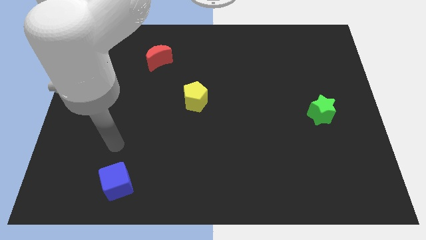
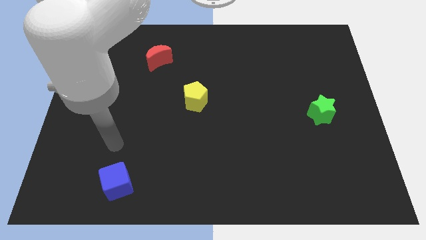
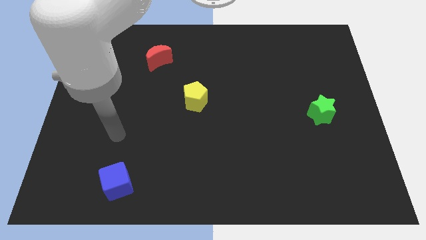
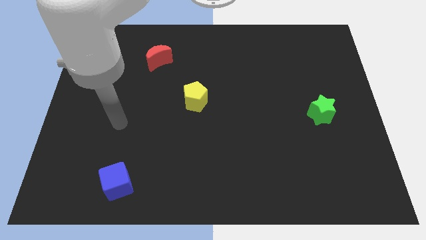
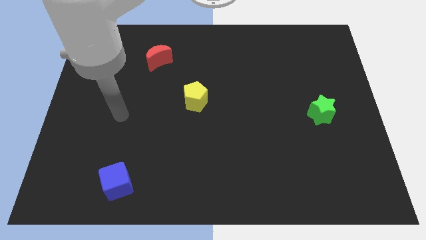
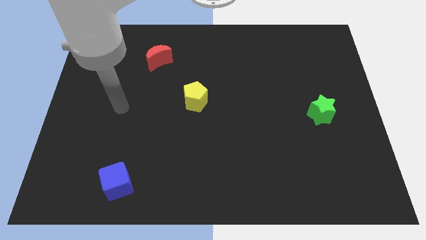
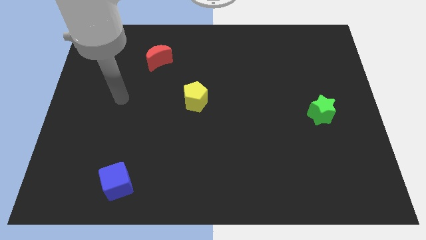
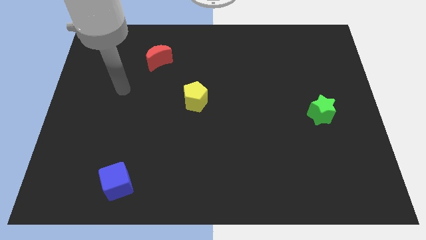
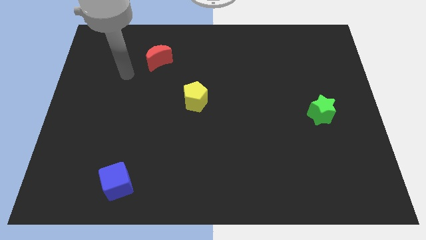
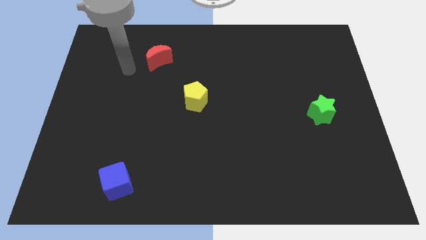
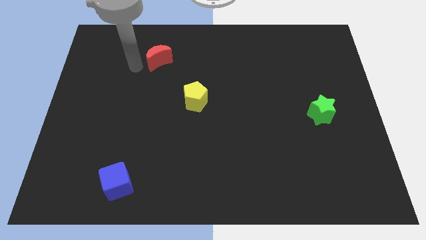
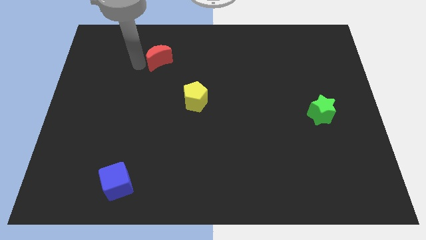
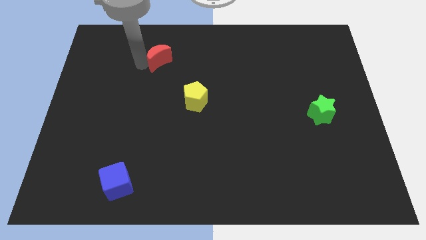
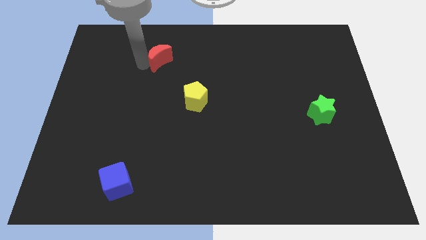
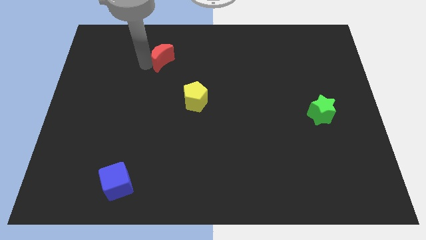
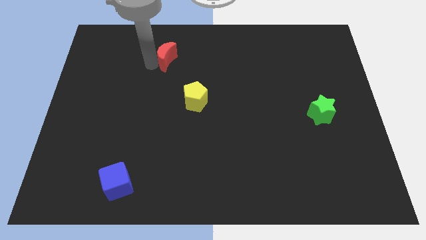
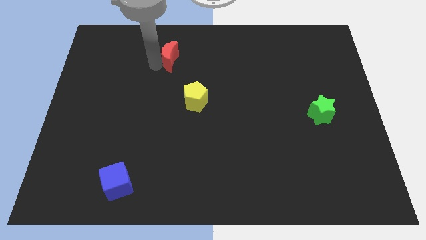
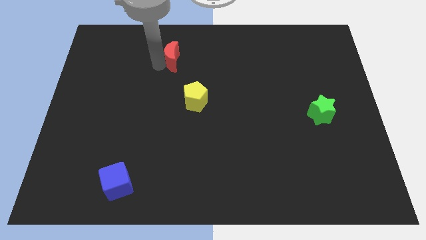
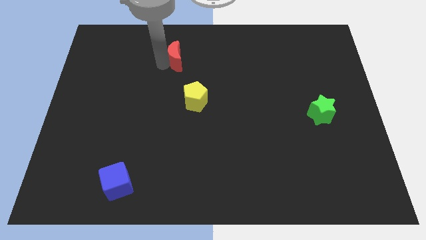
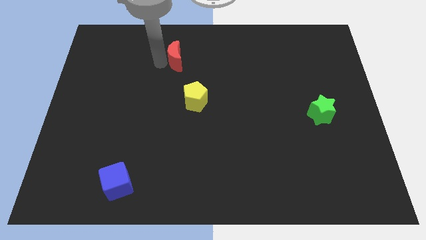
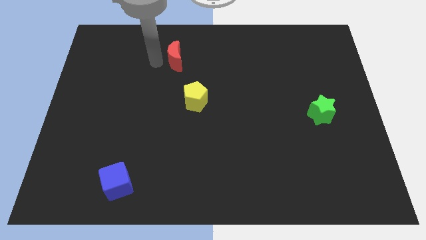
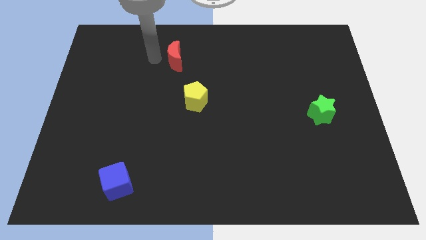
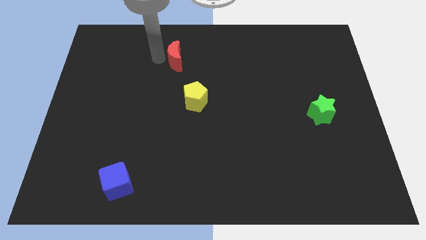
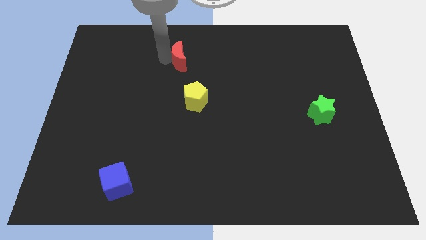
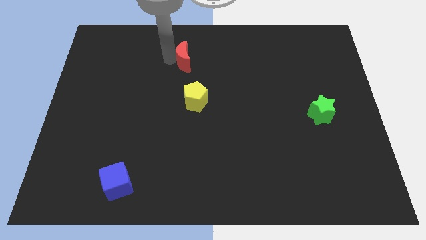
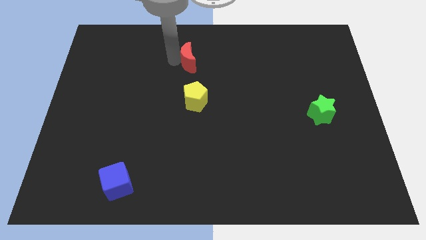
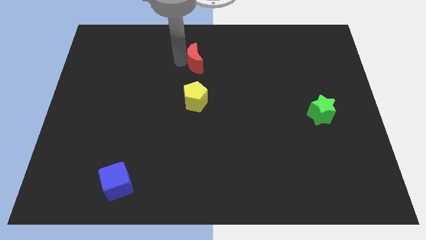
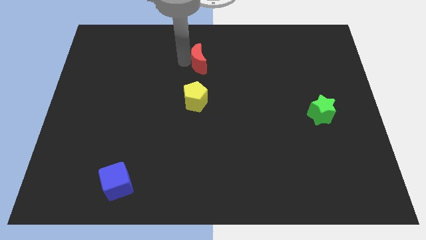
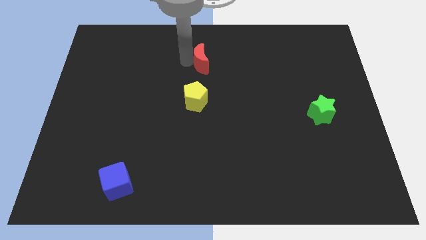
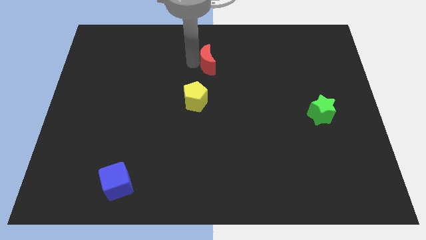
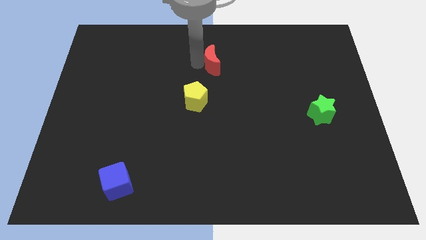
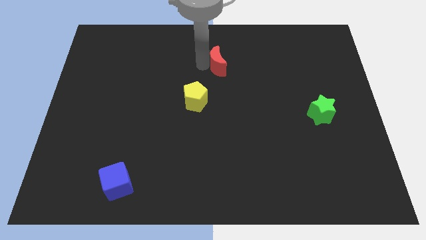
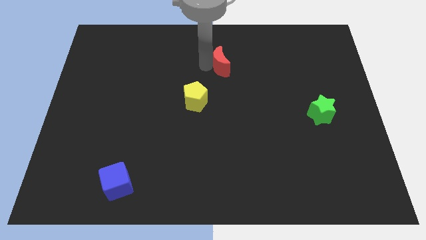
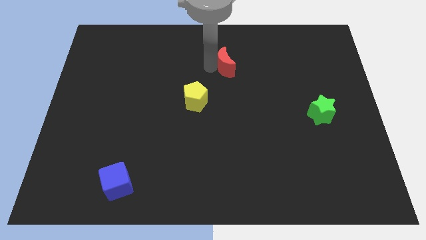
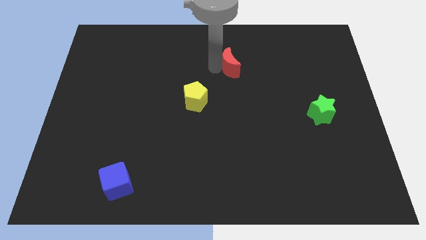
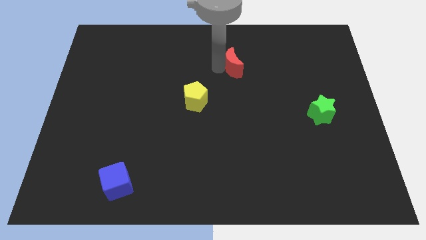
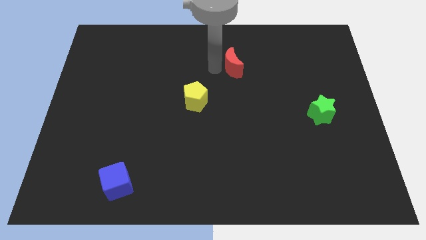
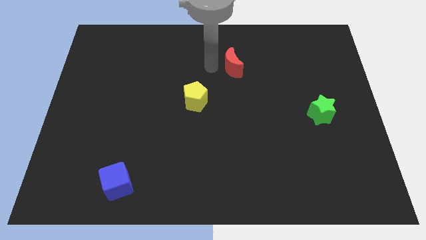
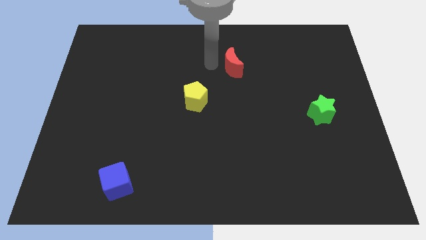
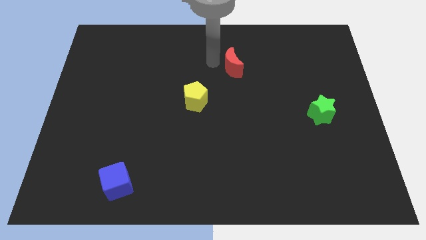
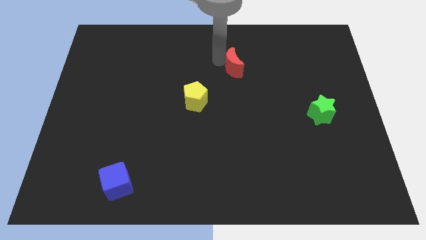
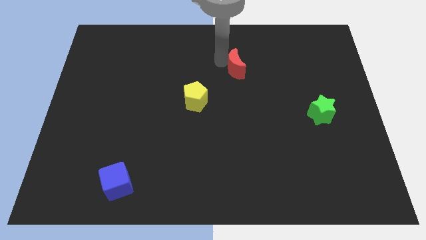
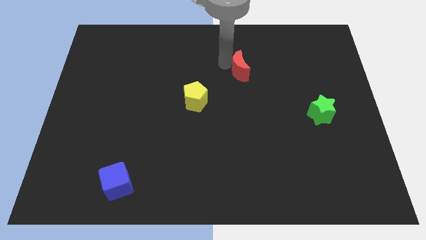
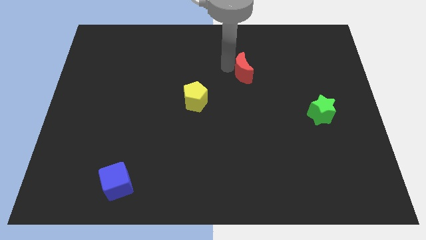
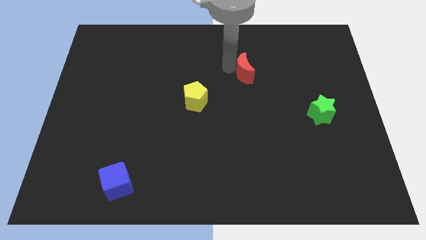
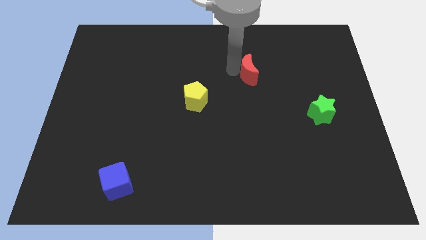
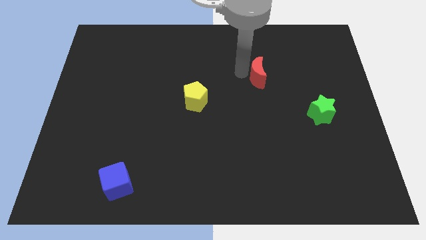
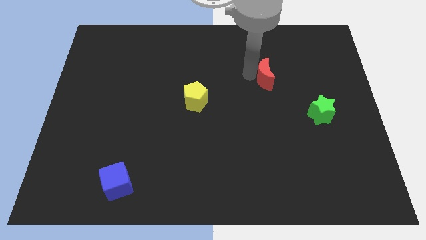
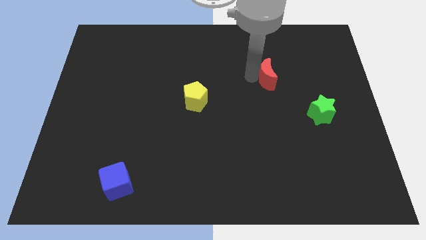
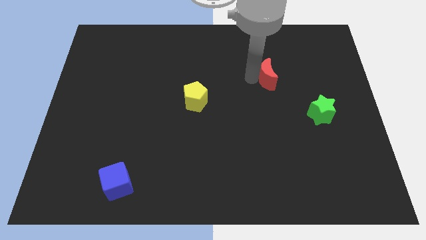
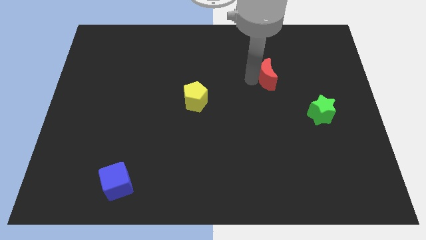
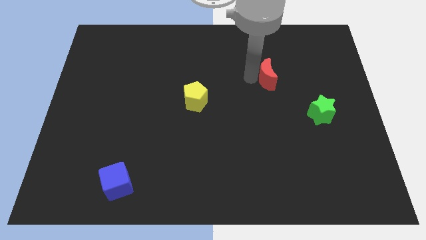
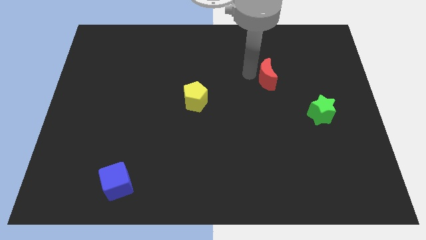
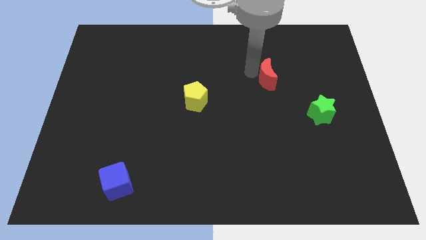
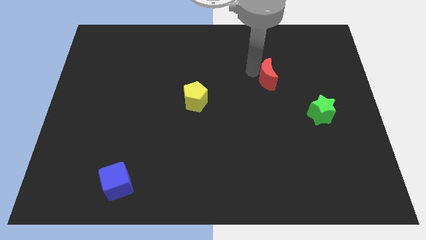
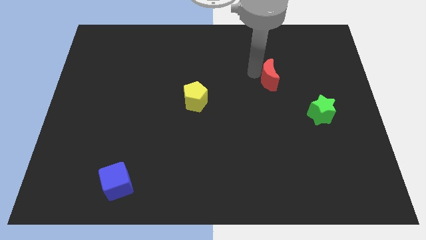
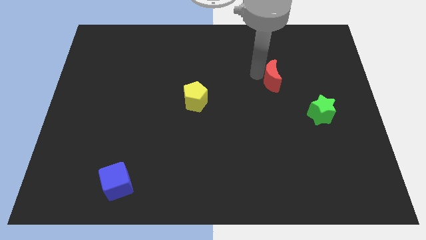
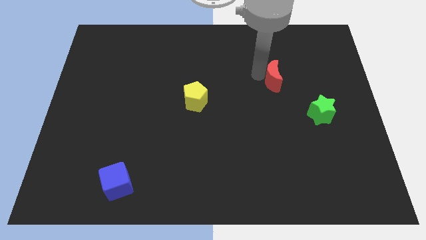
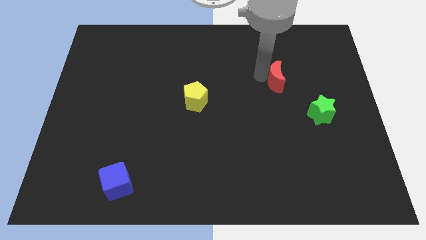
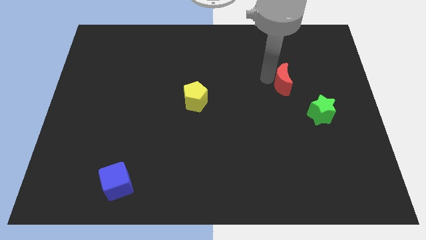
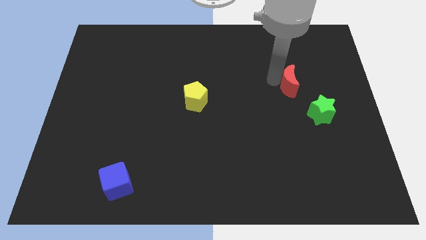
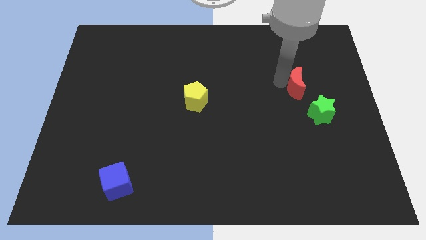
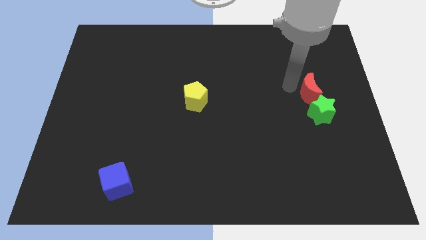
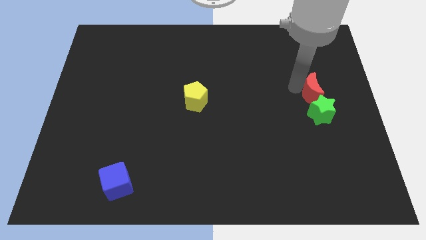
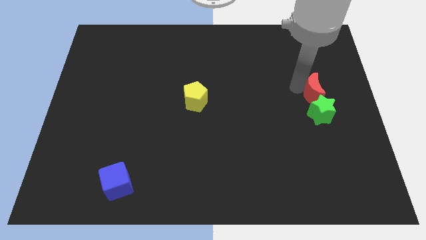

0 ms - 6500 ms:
slide the red moon to the green block

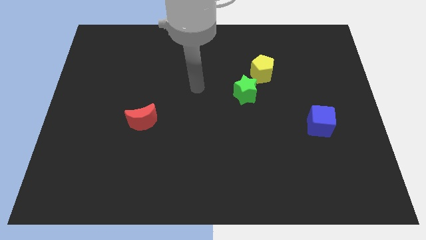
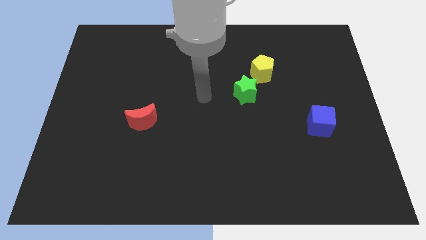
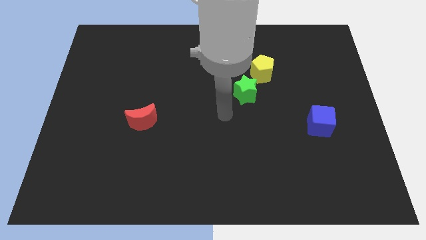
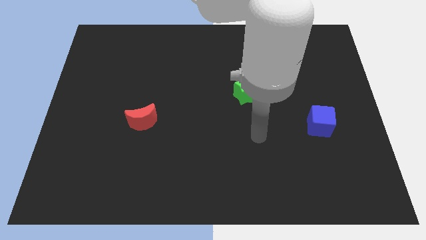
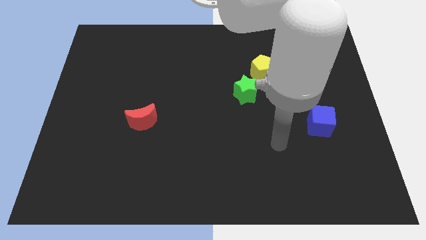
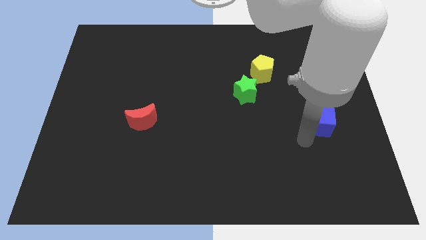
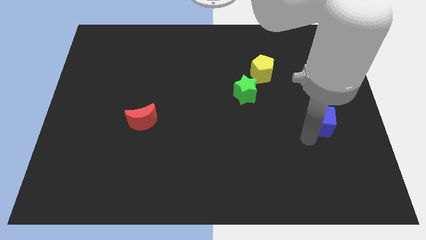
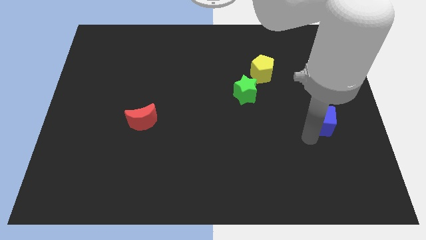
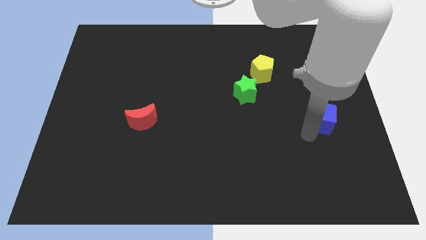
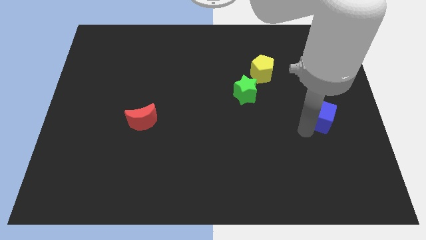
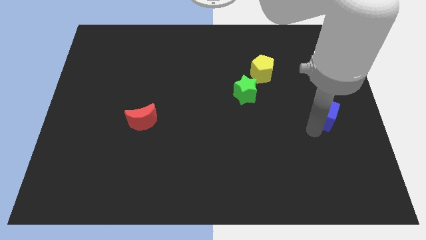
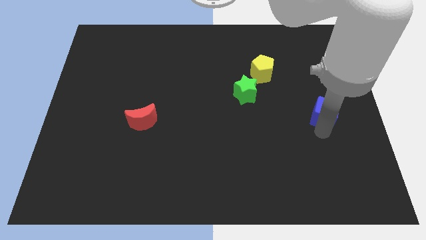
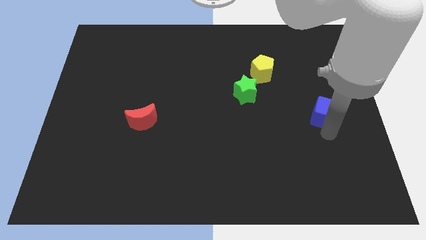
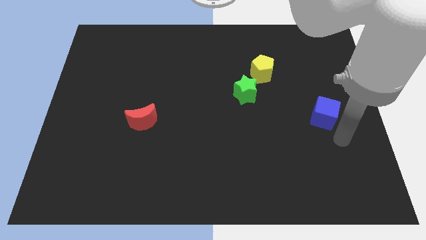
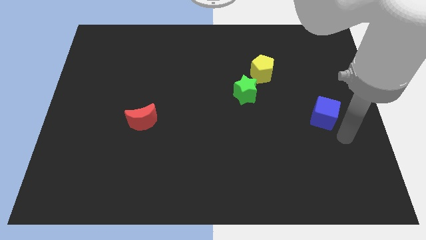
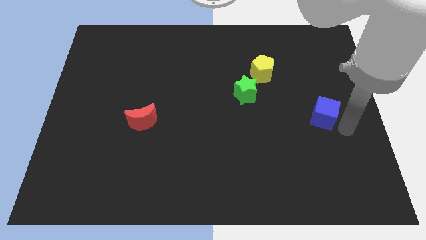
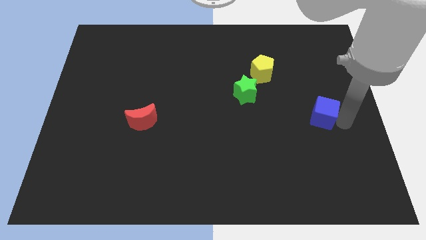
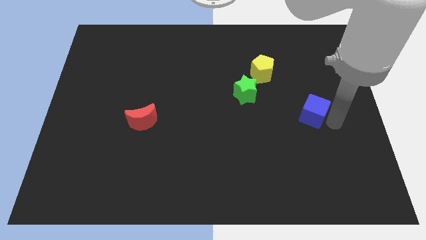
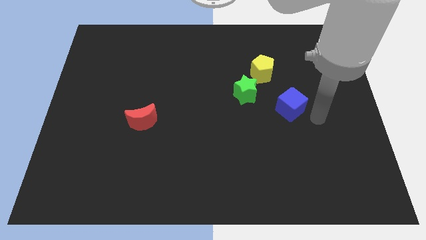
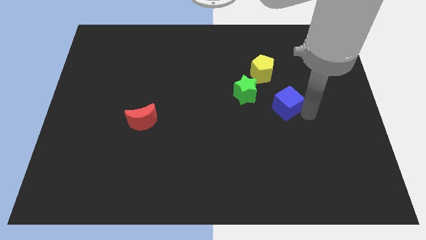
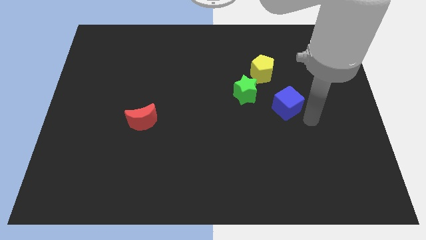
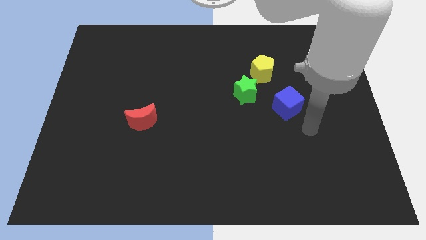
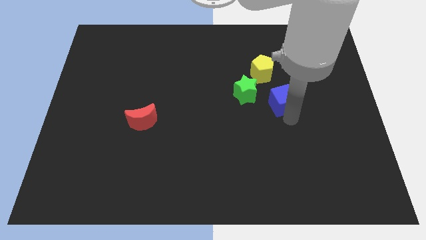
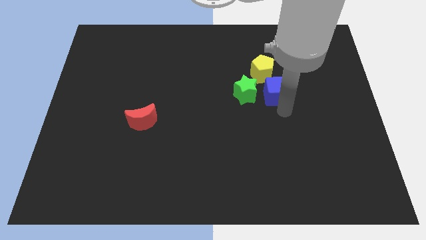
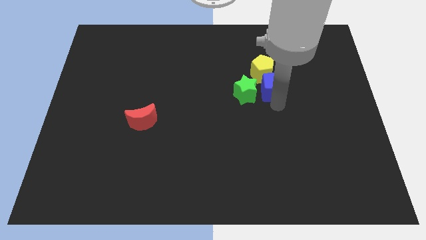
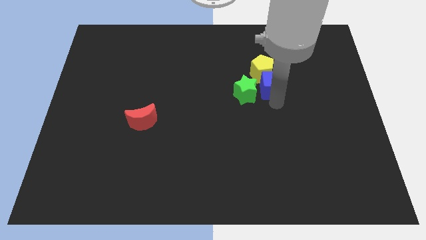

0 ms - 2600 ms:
slide the blue cube next to the yellow pentagon
